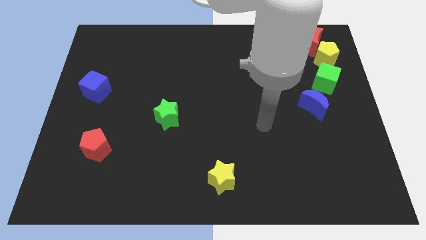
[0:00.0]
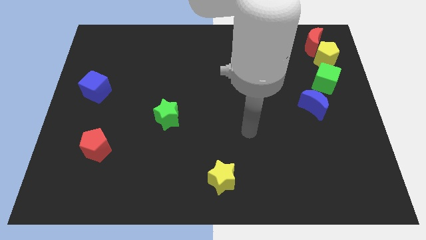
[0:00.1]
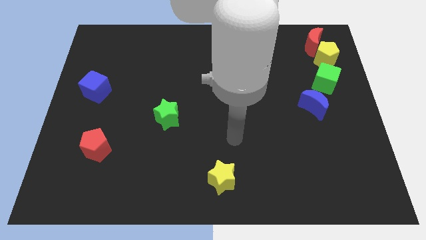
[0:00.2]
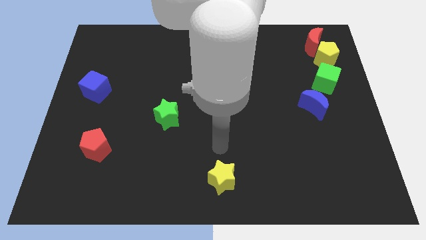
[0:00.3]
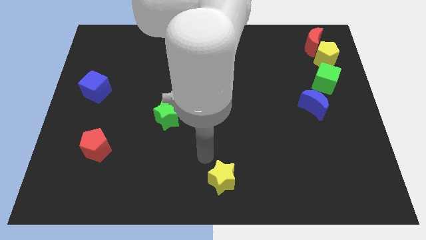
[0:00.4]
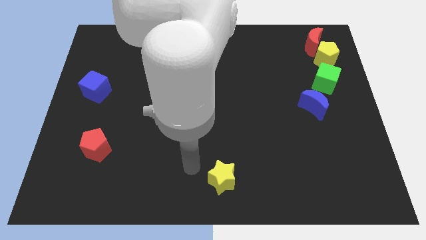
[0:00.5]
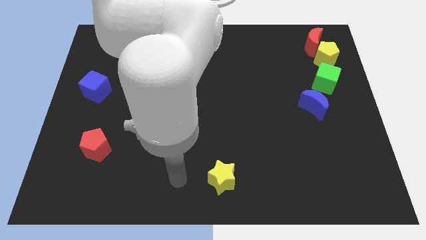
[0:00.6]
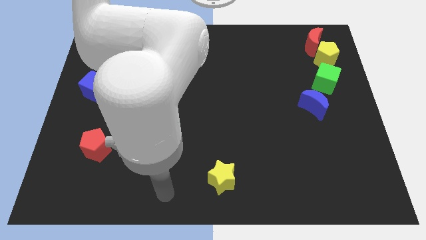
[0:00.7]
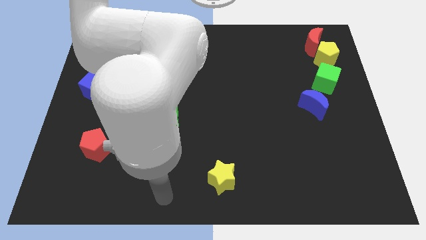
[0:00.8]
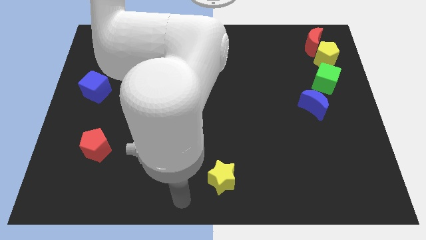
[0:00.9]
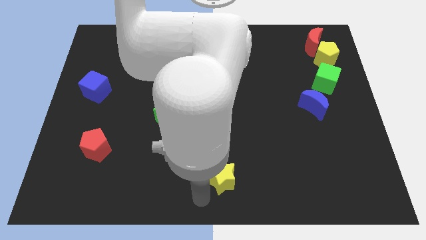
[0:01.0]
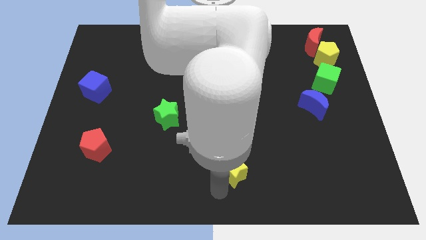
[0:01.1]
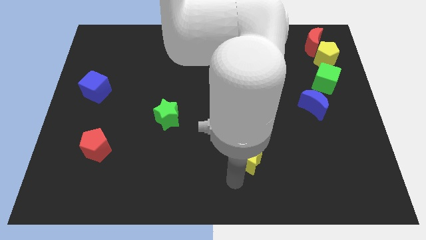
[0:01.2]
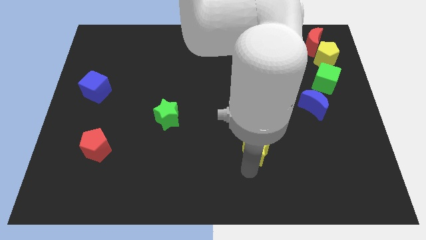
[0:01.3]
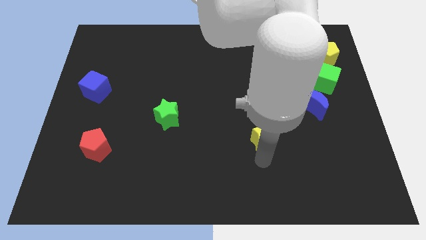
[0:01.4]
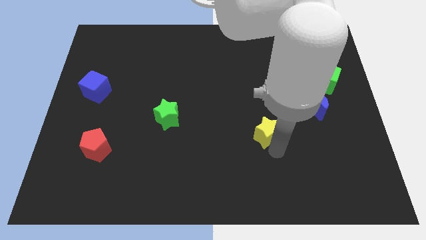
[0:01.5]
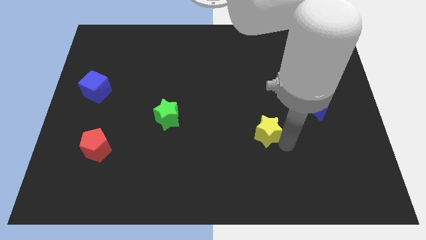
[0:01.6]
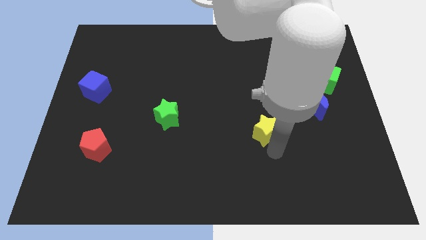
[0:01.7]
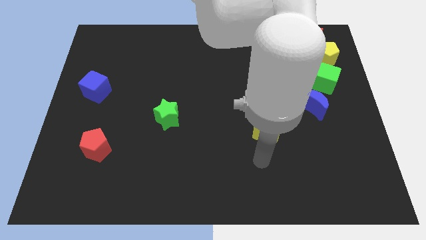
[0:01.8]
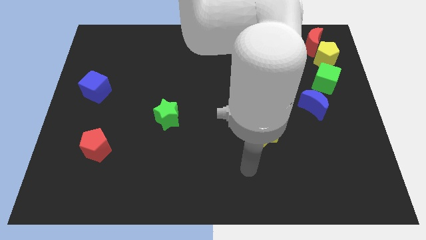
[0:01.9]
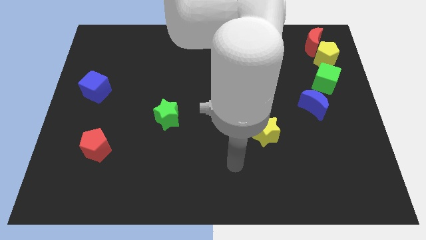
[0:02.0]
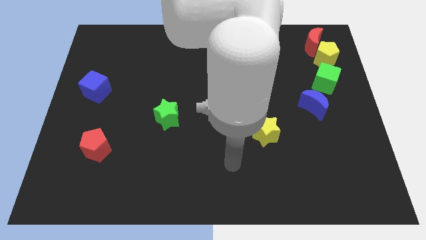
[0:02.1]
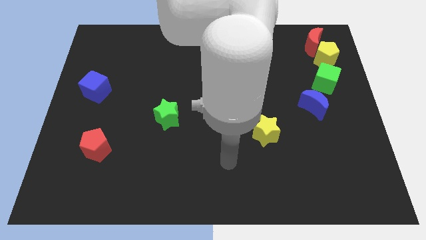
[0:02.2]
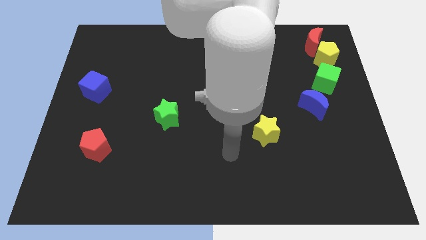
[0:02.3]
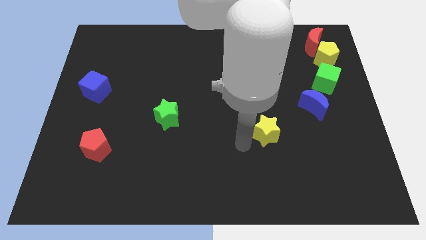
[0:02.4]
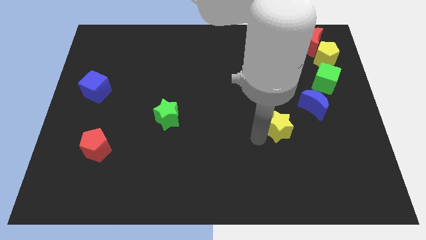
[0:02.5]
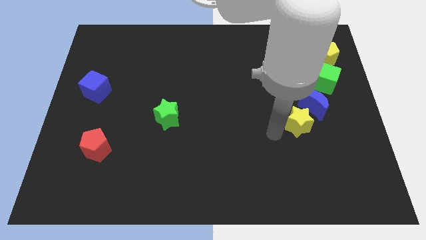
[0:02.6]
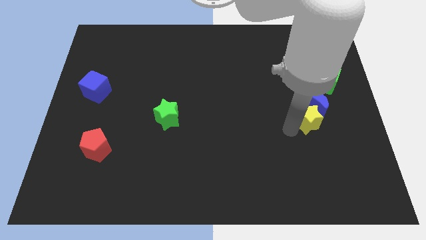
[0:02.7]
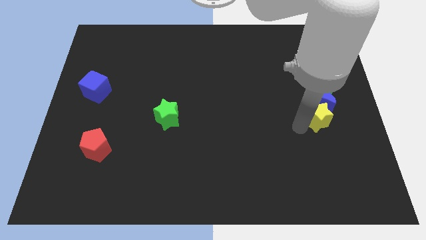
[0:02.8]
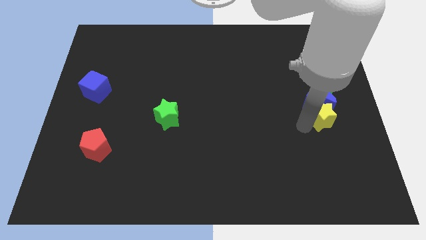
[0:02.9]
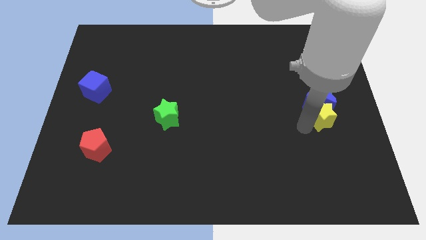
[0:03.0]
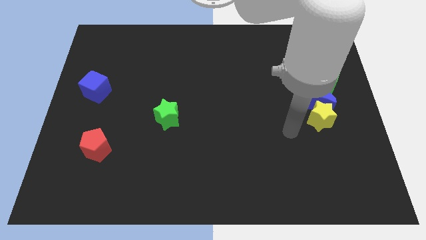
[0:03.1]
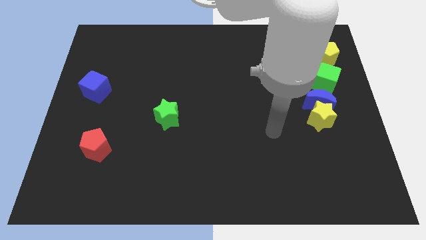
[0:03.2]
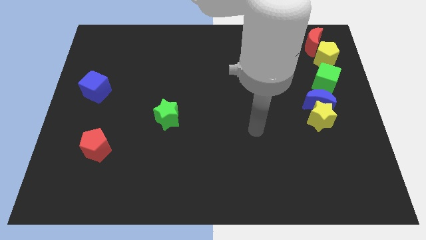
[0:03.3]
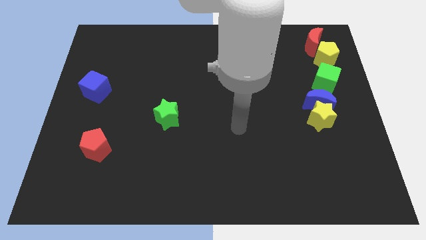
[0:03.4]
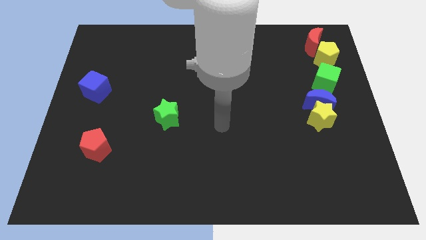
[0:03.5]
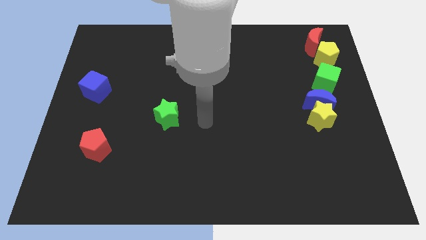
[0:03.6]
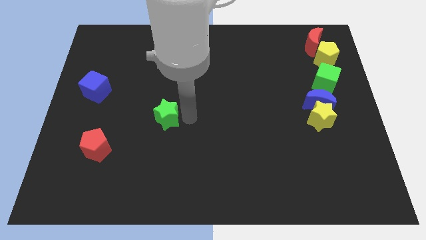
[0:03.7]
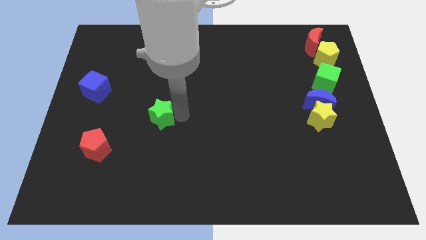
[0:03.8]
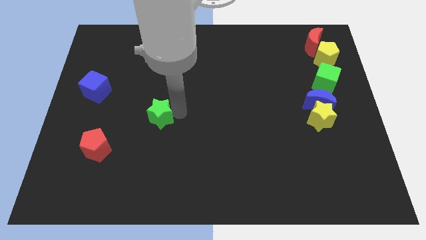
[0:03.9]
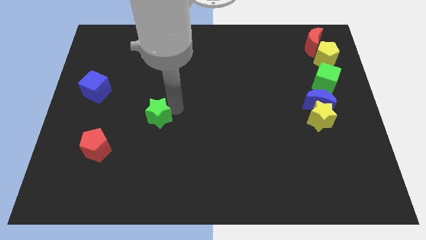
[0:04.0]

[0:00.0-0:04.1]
push the yellow star into the blue crescent

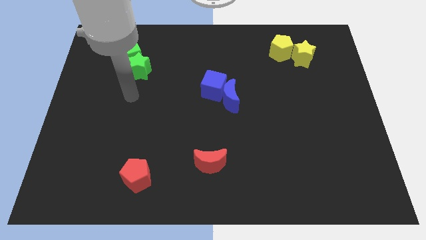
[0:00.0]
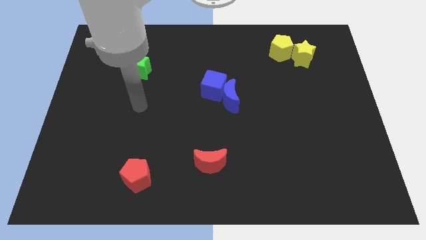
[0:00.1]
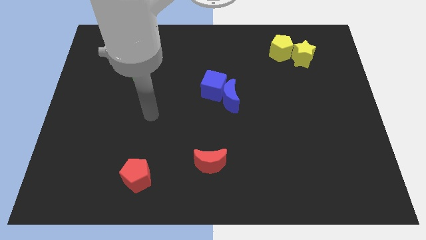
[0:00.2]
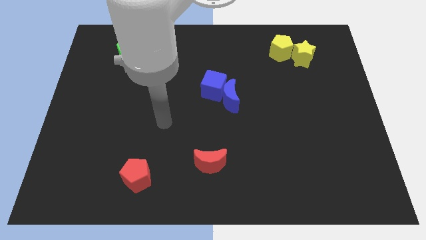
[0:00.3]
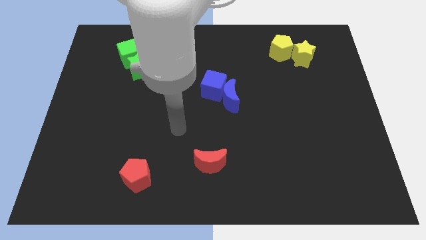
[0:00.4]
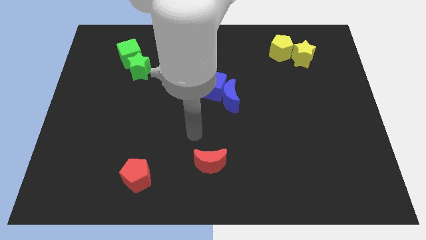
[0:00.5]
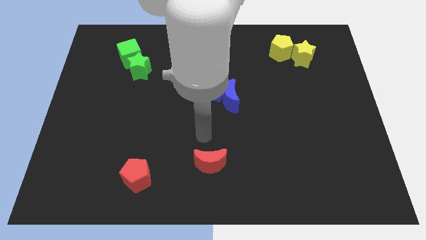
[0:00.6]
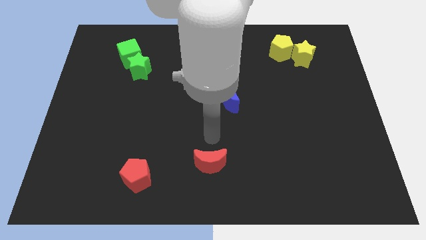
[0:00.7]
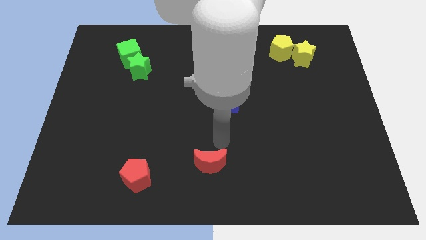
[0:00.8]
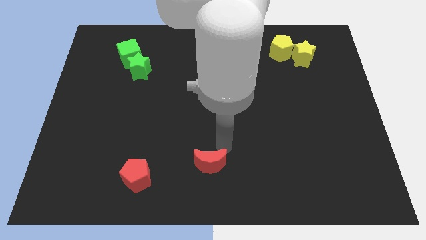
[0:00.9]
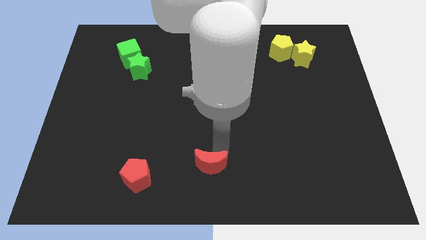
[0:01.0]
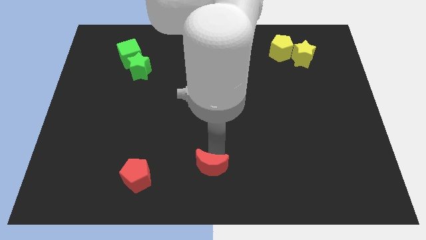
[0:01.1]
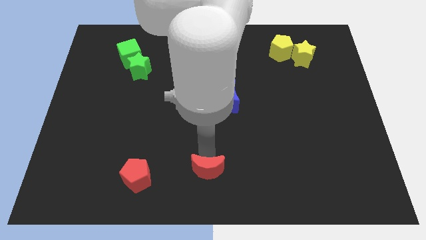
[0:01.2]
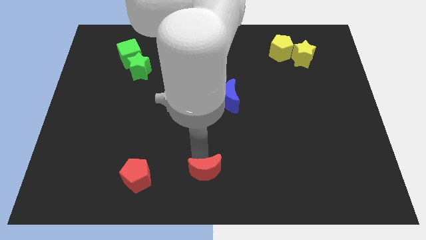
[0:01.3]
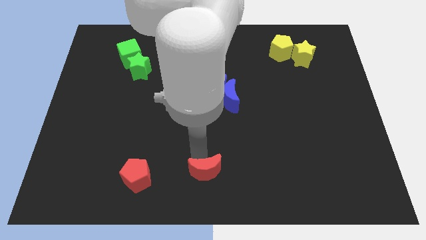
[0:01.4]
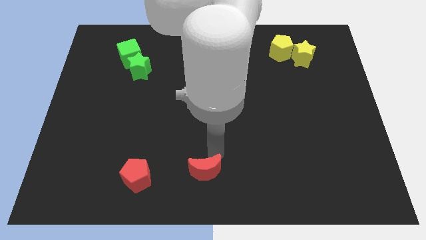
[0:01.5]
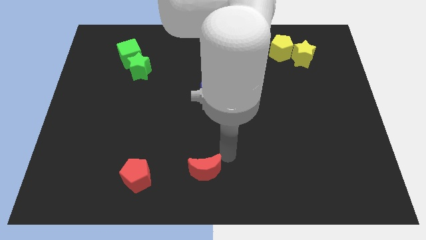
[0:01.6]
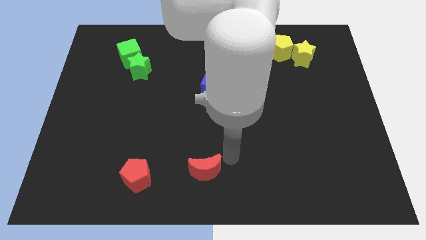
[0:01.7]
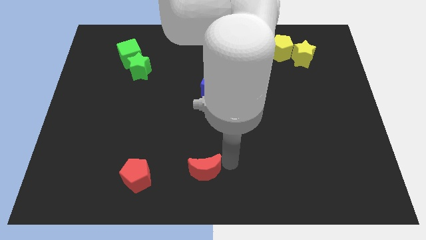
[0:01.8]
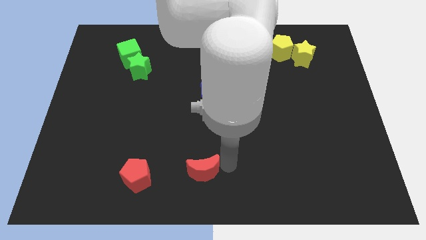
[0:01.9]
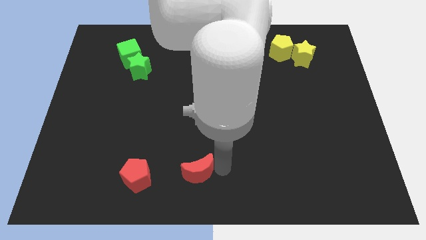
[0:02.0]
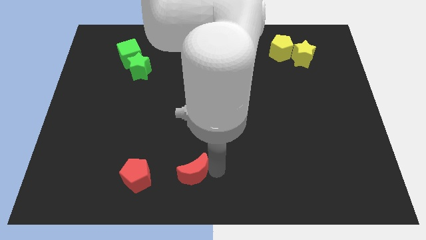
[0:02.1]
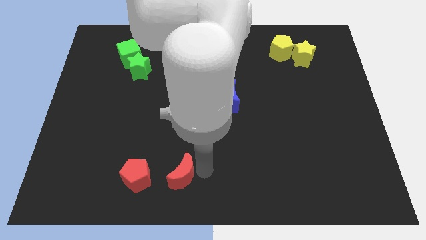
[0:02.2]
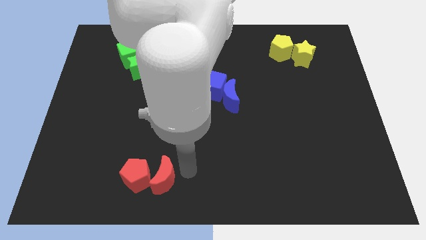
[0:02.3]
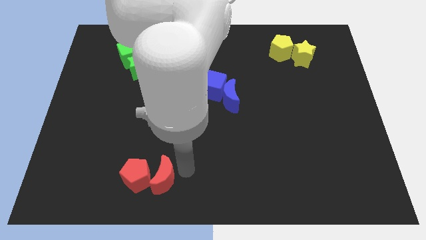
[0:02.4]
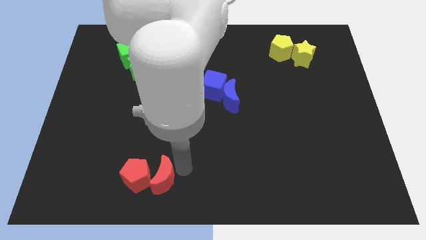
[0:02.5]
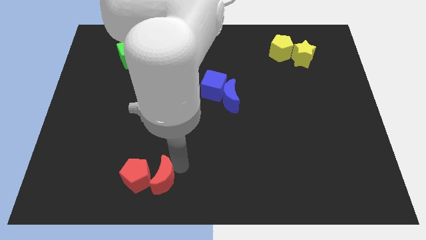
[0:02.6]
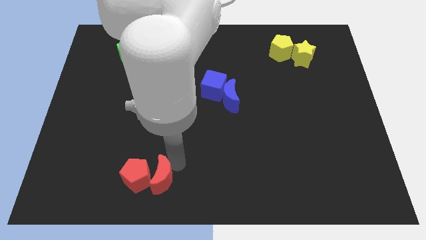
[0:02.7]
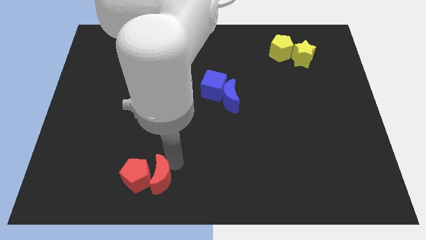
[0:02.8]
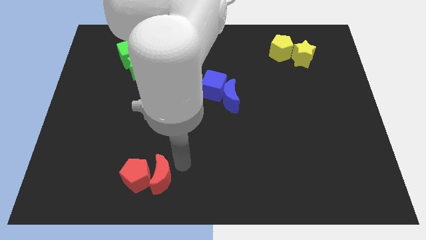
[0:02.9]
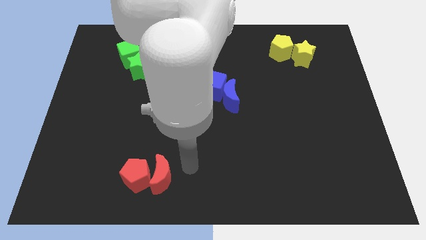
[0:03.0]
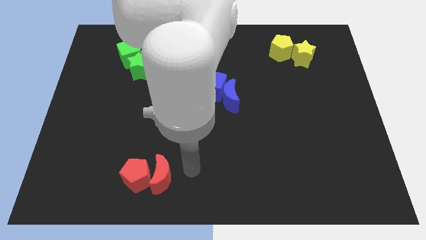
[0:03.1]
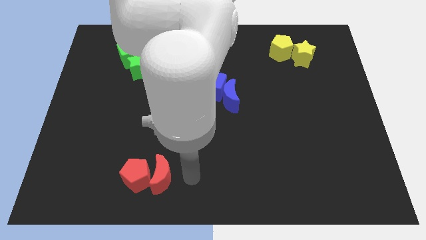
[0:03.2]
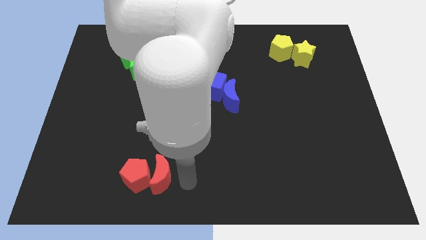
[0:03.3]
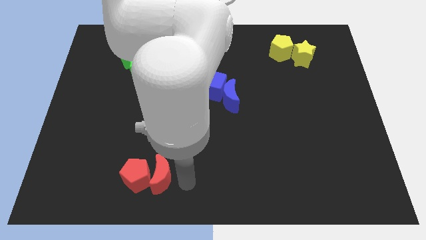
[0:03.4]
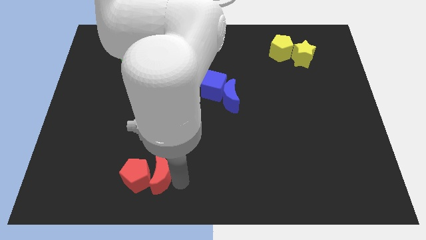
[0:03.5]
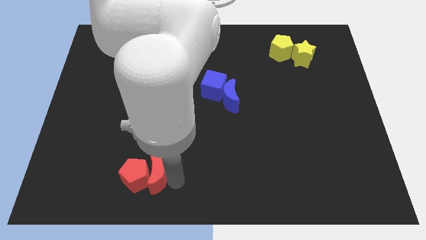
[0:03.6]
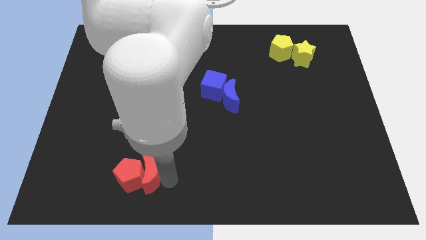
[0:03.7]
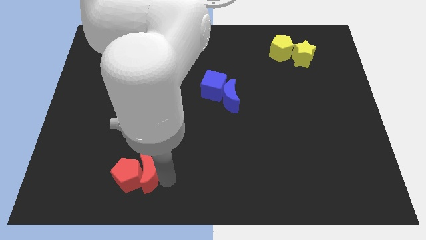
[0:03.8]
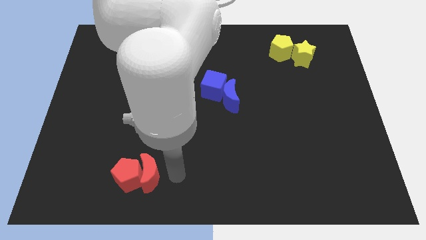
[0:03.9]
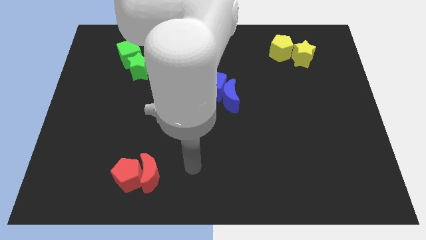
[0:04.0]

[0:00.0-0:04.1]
move the red moon into the red pentagon

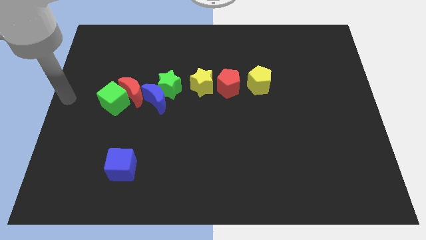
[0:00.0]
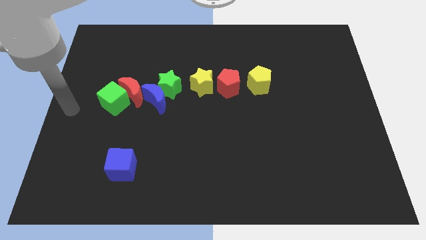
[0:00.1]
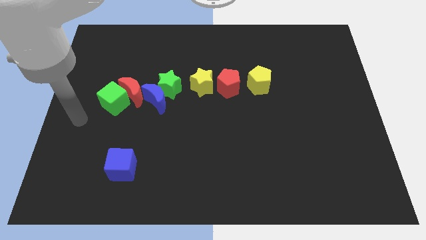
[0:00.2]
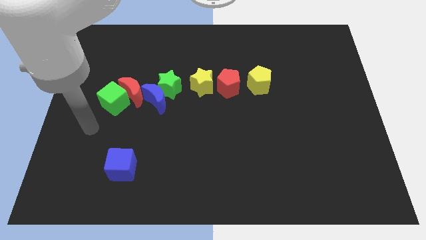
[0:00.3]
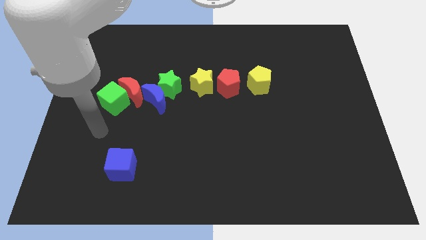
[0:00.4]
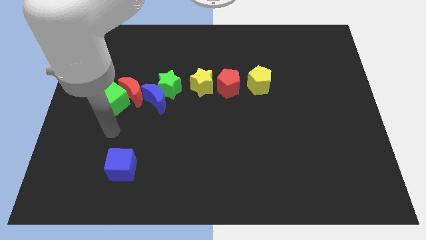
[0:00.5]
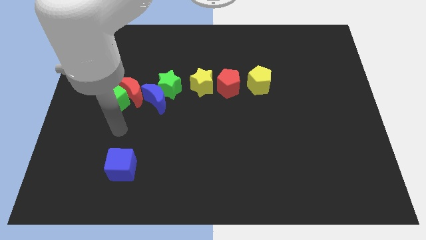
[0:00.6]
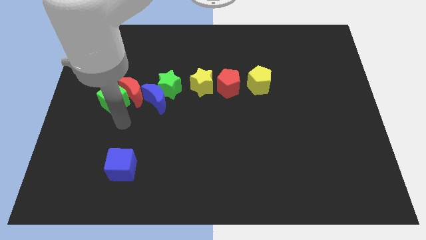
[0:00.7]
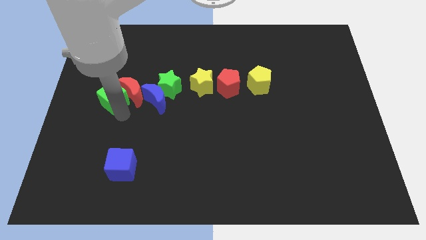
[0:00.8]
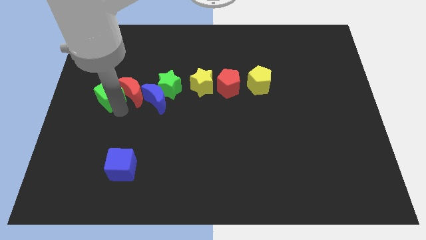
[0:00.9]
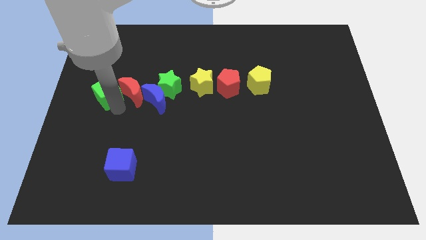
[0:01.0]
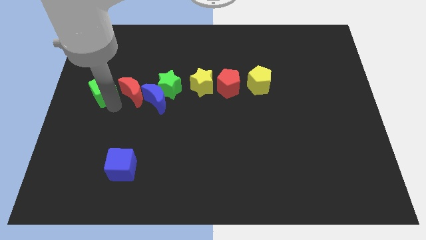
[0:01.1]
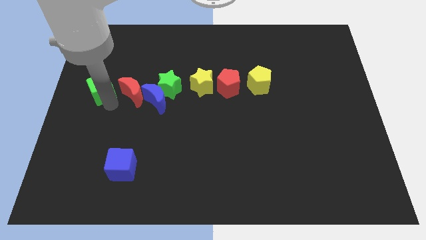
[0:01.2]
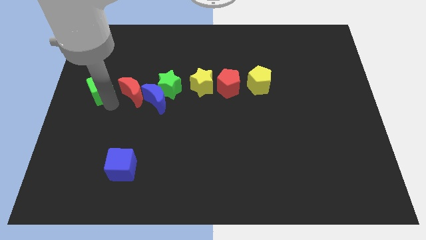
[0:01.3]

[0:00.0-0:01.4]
push the green cube slightly to the top
